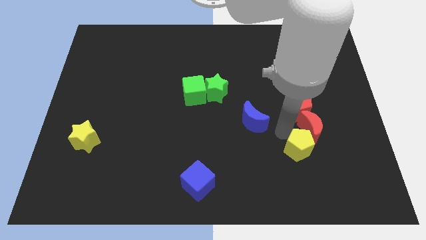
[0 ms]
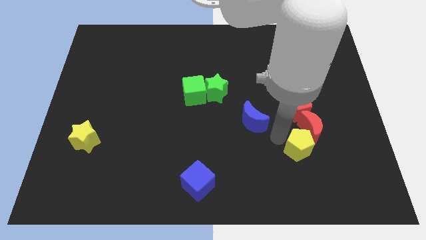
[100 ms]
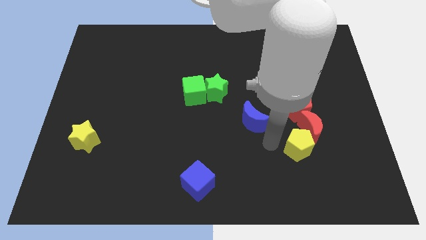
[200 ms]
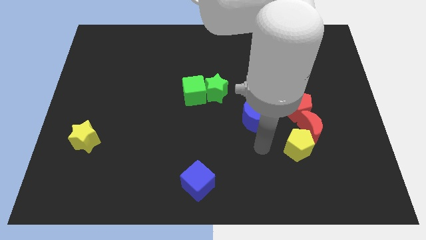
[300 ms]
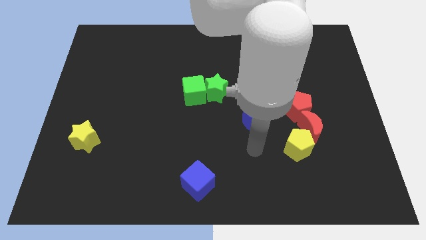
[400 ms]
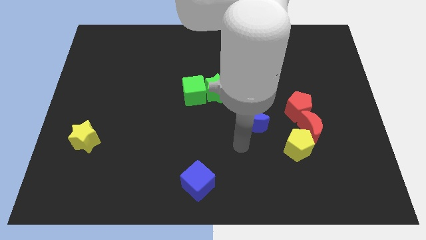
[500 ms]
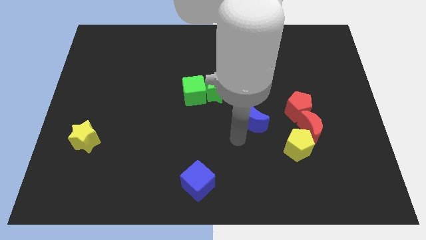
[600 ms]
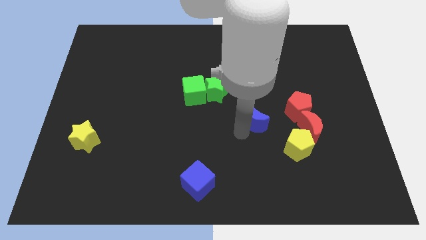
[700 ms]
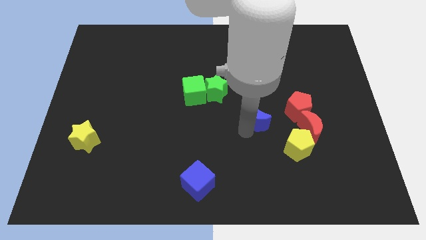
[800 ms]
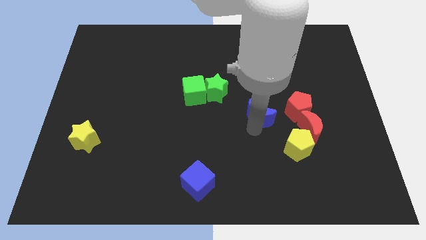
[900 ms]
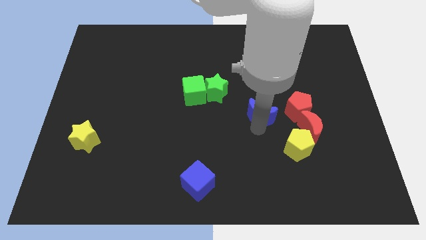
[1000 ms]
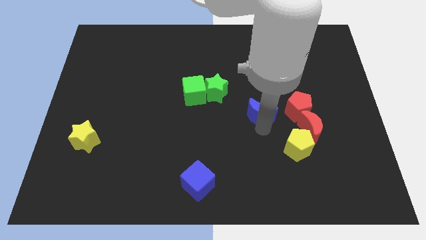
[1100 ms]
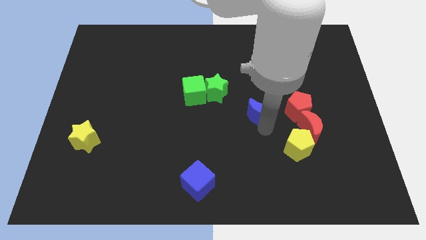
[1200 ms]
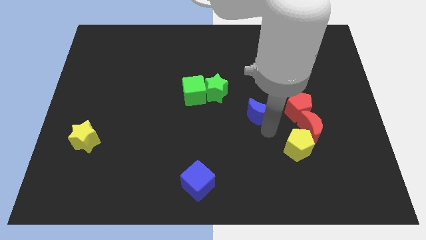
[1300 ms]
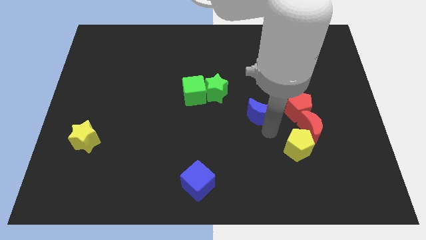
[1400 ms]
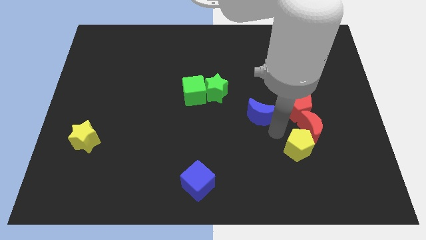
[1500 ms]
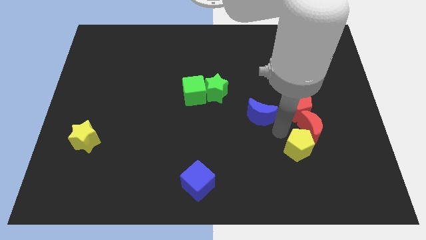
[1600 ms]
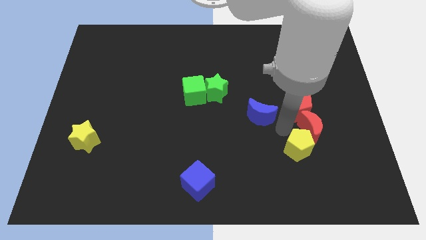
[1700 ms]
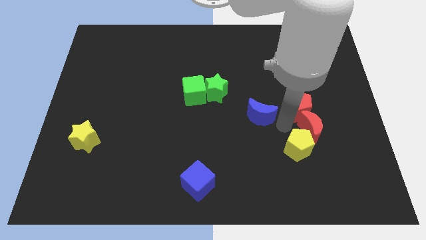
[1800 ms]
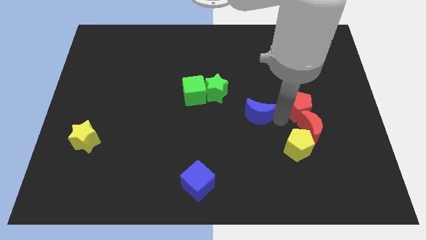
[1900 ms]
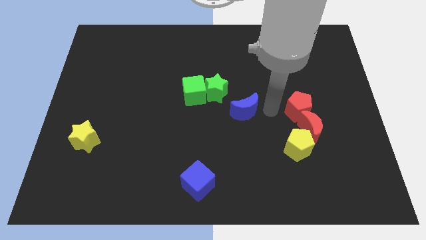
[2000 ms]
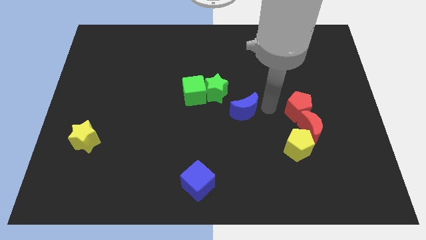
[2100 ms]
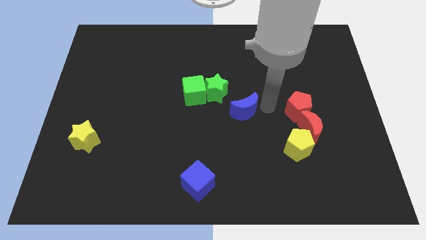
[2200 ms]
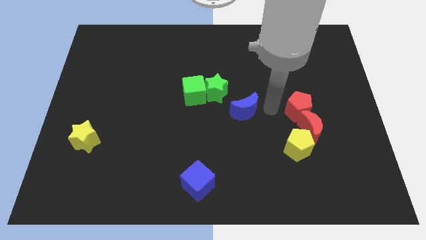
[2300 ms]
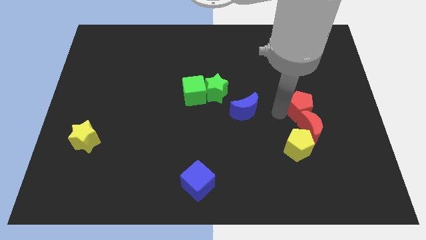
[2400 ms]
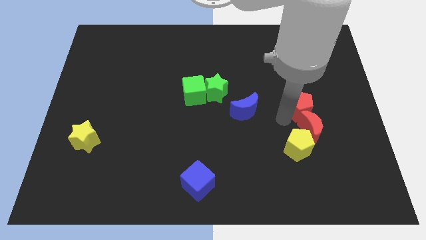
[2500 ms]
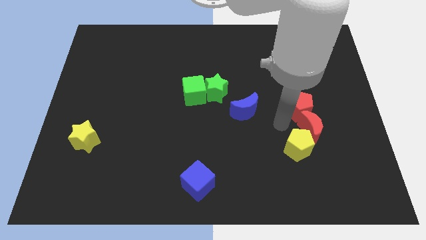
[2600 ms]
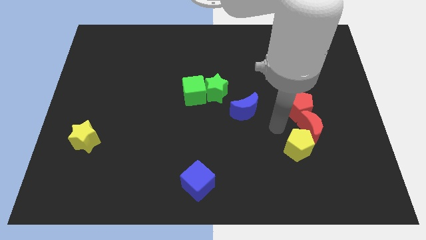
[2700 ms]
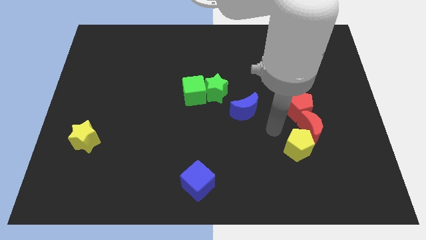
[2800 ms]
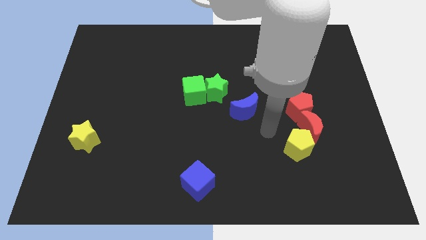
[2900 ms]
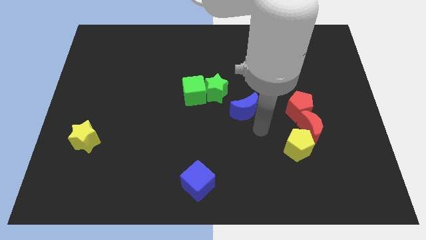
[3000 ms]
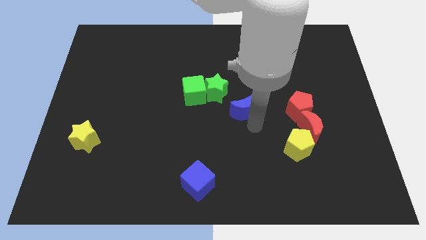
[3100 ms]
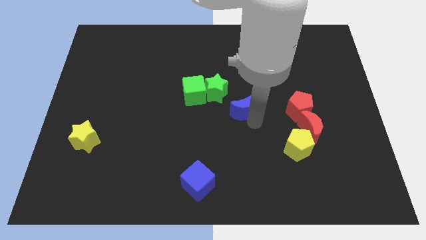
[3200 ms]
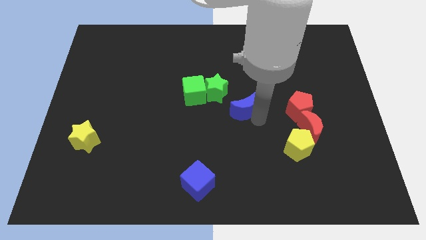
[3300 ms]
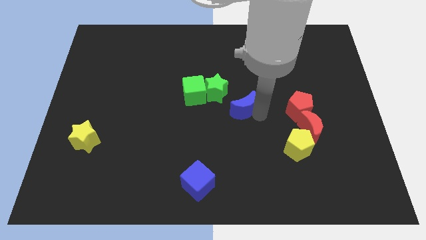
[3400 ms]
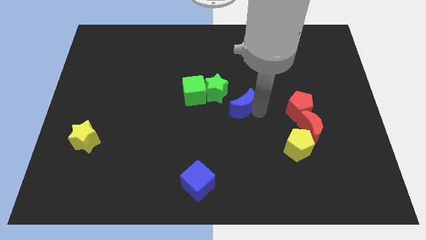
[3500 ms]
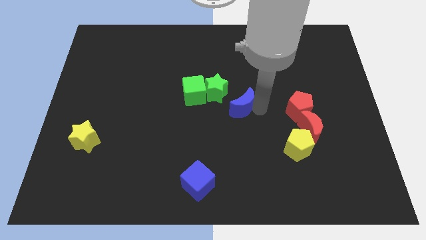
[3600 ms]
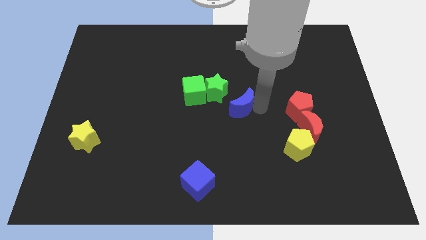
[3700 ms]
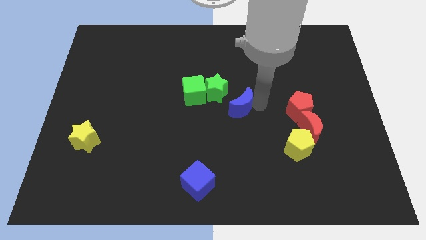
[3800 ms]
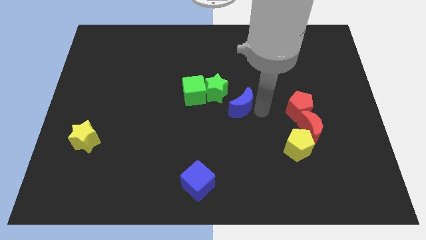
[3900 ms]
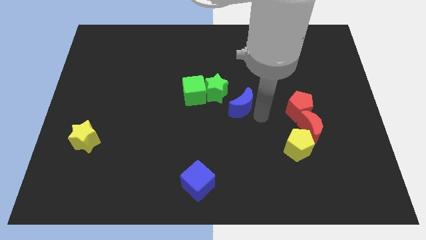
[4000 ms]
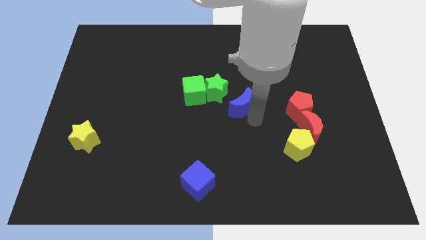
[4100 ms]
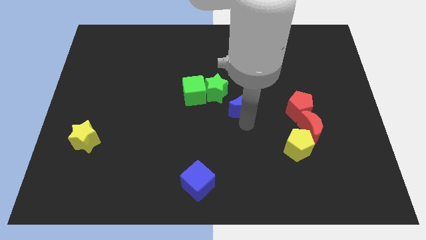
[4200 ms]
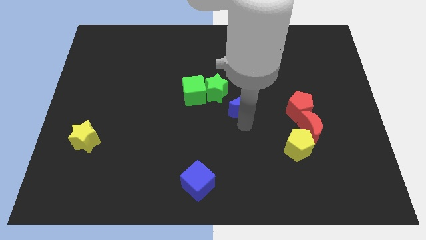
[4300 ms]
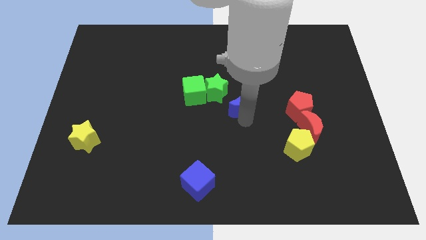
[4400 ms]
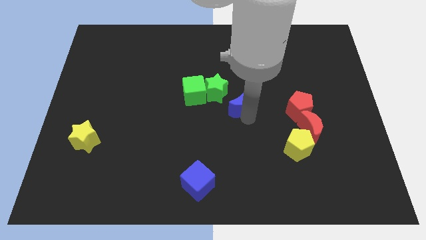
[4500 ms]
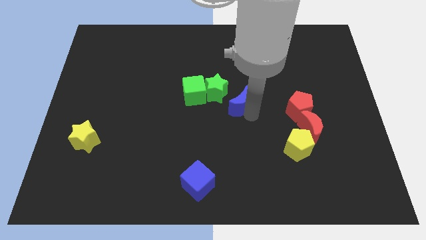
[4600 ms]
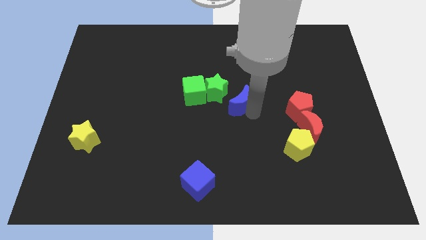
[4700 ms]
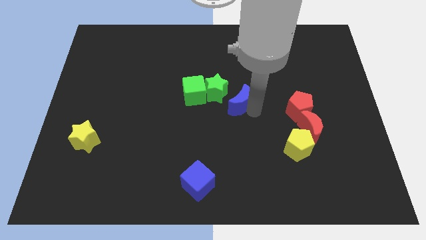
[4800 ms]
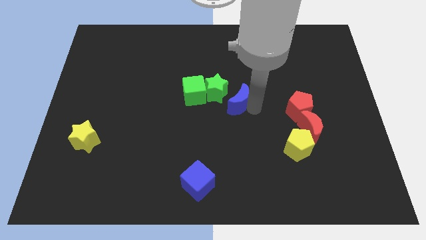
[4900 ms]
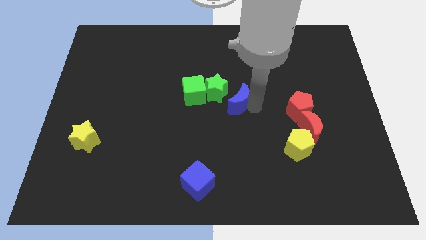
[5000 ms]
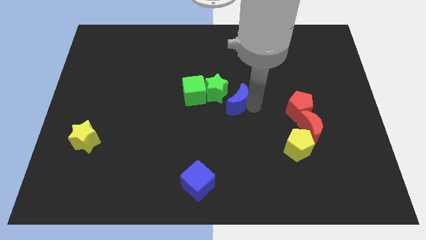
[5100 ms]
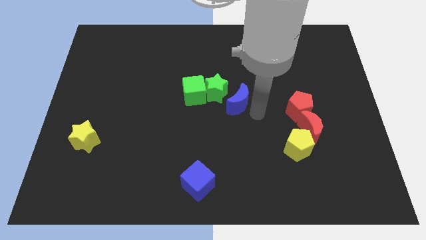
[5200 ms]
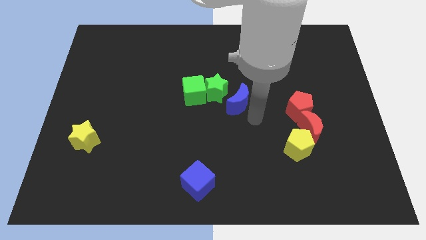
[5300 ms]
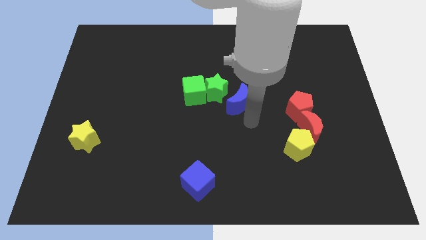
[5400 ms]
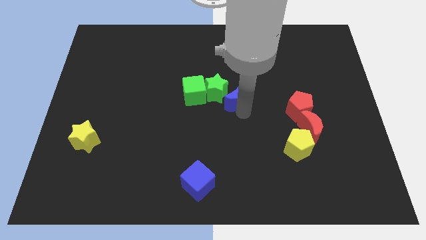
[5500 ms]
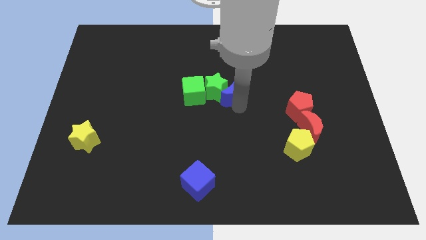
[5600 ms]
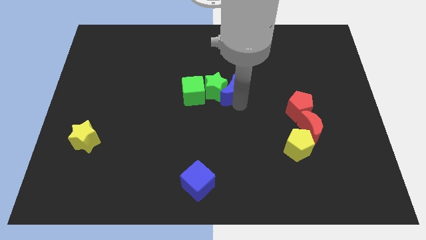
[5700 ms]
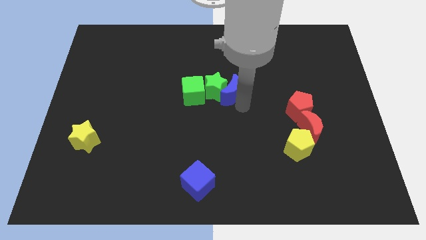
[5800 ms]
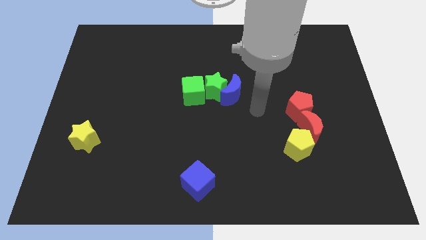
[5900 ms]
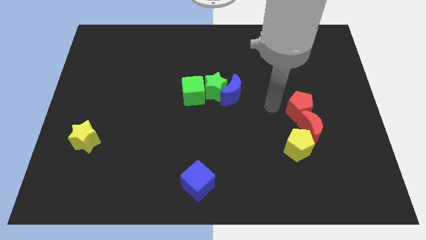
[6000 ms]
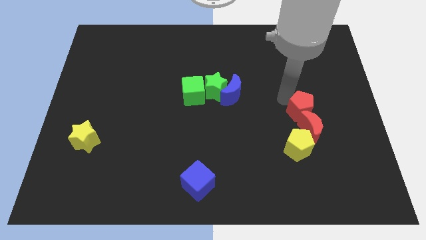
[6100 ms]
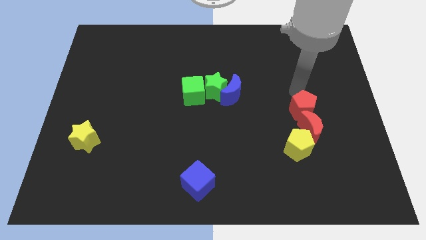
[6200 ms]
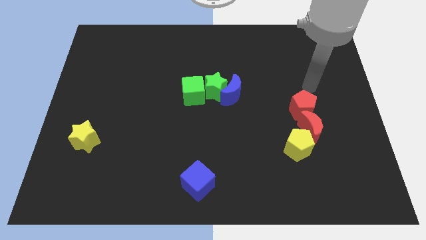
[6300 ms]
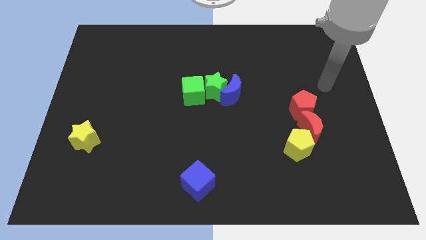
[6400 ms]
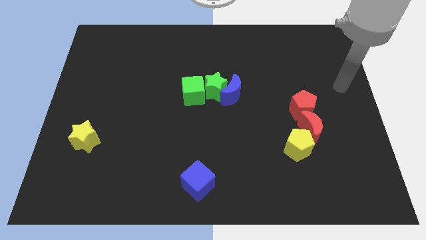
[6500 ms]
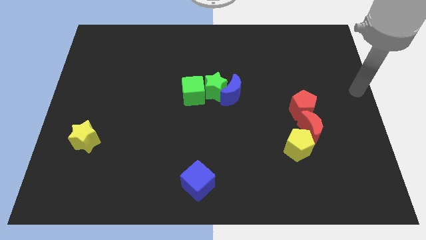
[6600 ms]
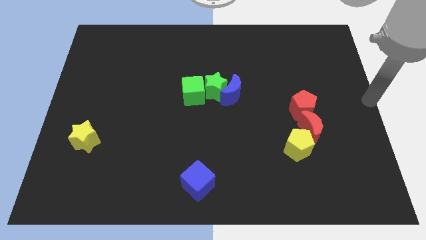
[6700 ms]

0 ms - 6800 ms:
push the blue moon into the green star

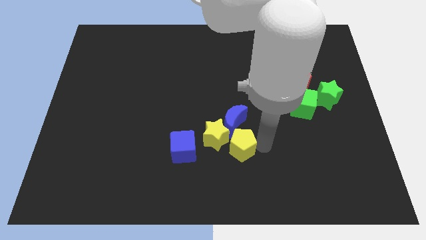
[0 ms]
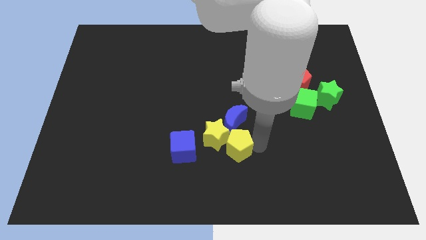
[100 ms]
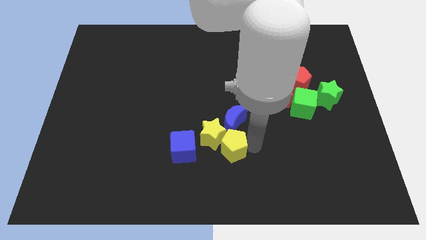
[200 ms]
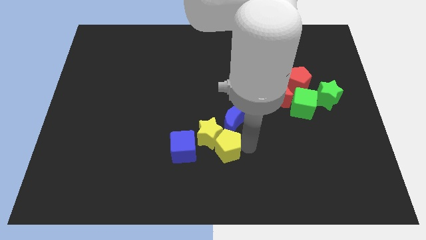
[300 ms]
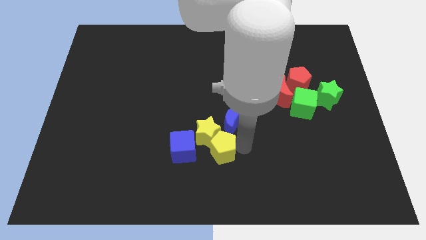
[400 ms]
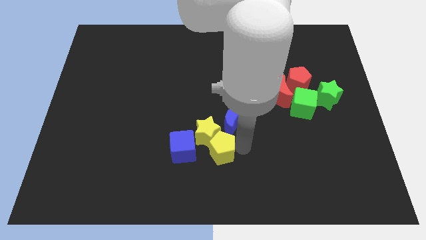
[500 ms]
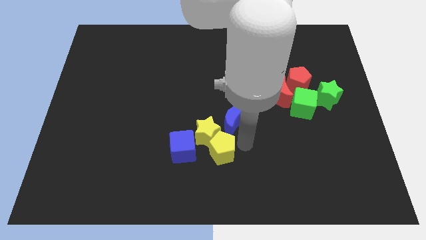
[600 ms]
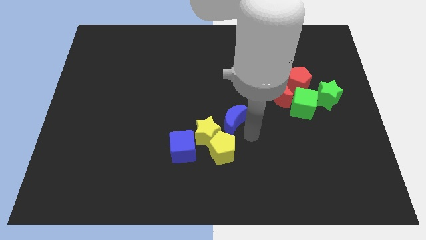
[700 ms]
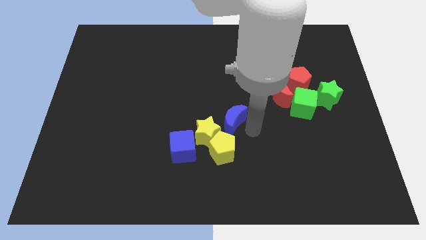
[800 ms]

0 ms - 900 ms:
move the yellow pentagon yellow star right to the blue cube

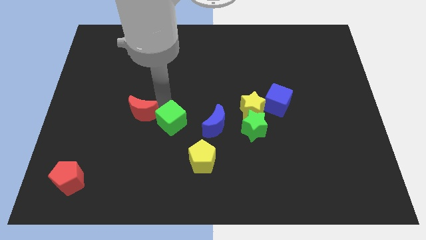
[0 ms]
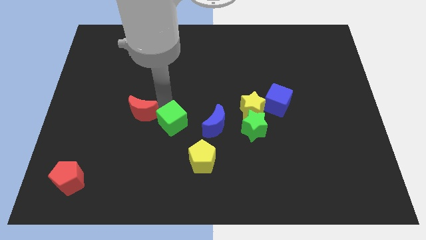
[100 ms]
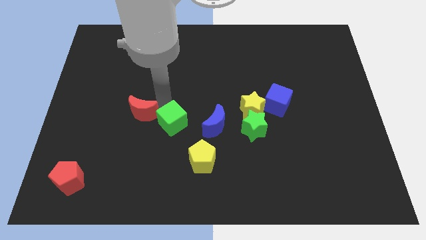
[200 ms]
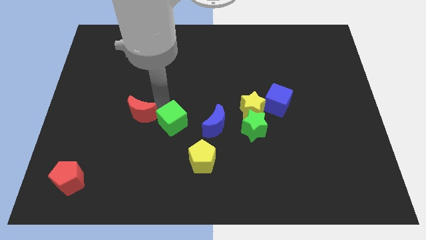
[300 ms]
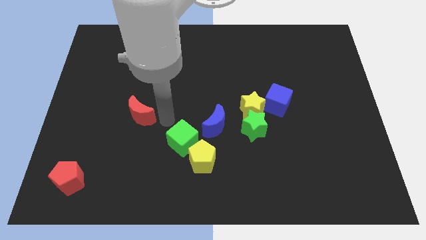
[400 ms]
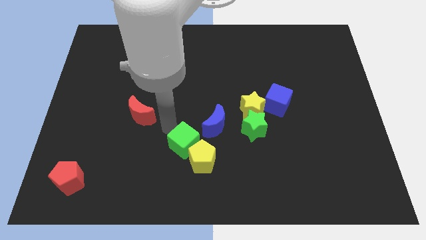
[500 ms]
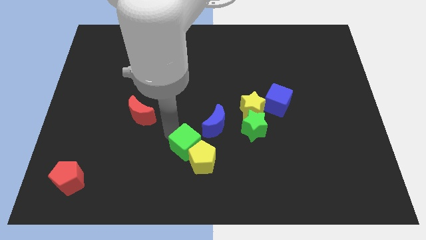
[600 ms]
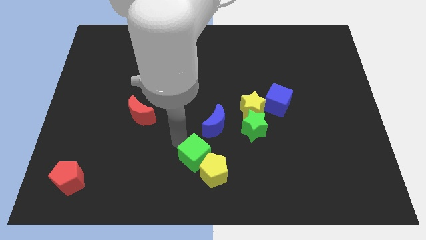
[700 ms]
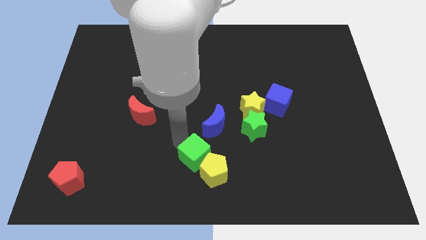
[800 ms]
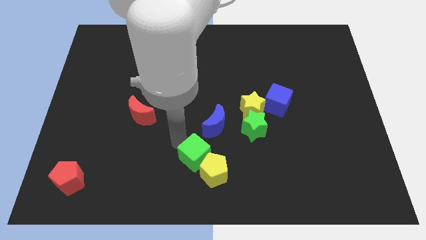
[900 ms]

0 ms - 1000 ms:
place green cube below blue crescent

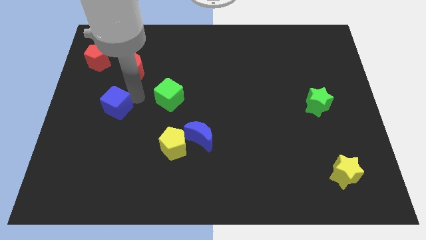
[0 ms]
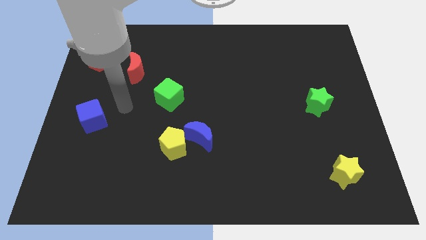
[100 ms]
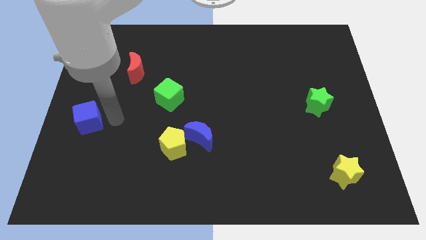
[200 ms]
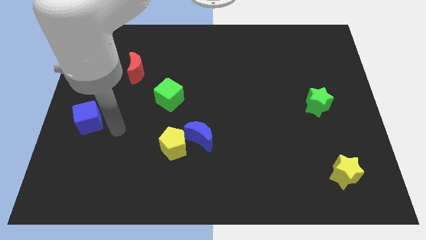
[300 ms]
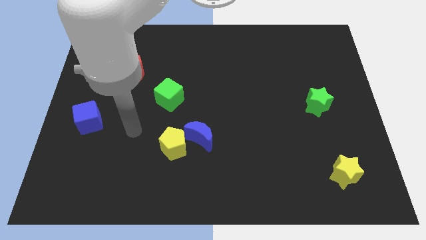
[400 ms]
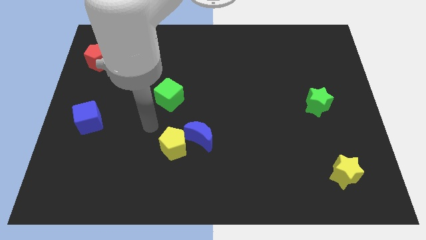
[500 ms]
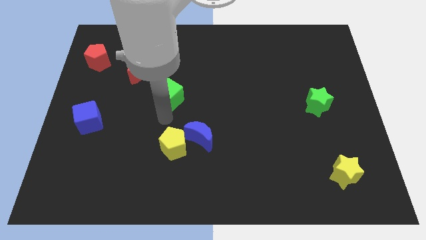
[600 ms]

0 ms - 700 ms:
move the blue block from the top side of the board
